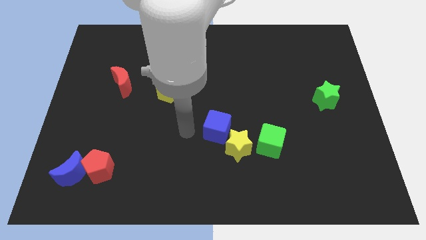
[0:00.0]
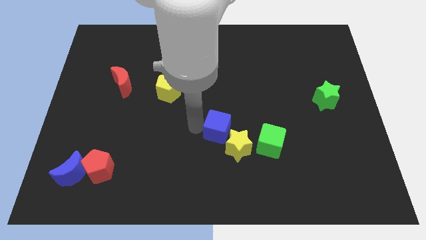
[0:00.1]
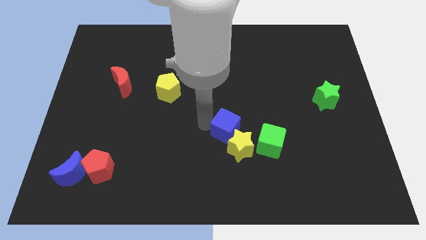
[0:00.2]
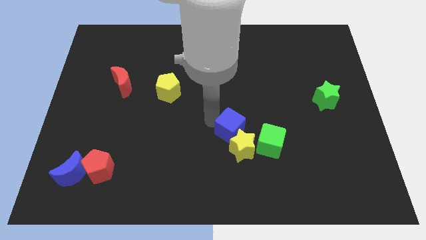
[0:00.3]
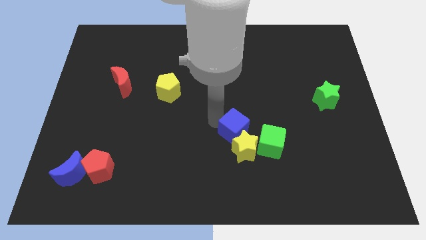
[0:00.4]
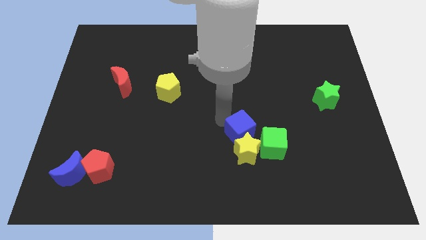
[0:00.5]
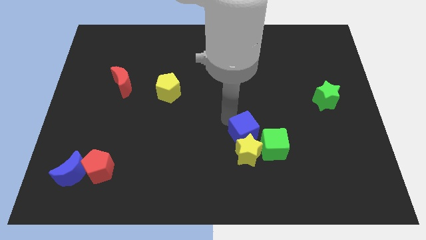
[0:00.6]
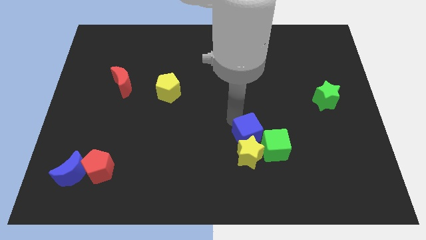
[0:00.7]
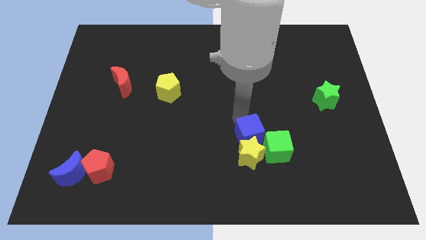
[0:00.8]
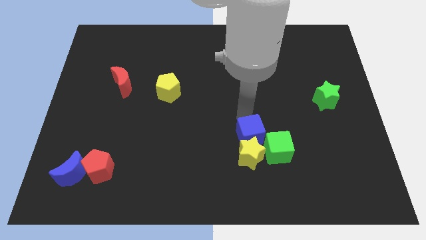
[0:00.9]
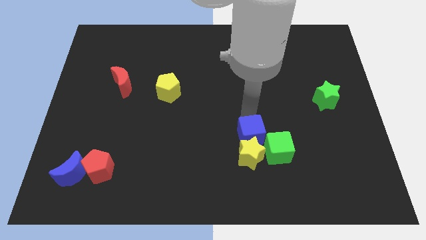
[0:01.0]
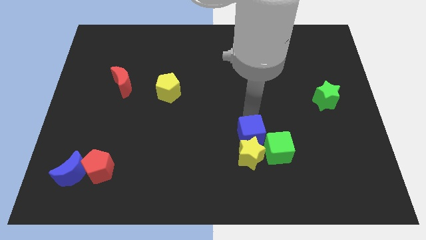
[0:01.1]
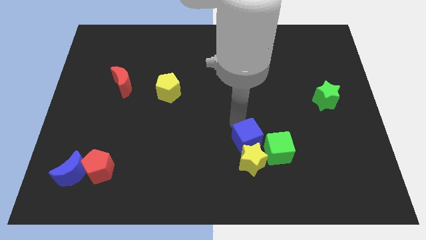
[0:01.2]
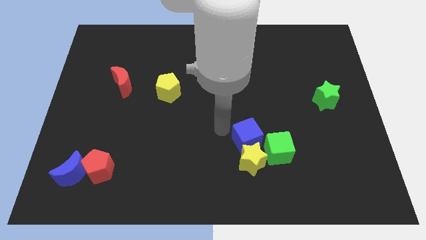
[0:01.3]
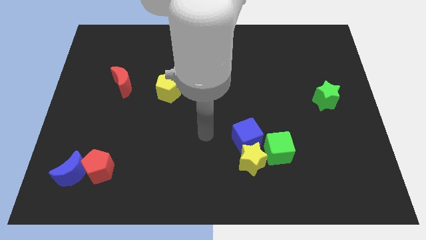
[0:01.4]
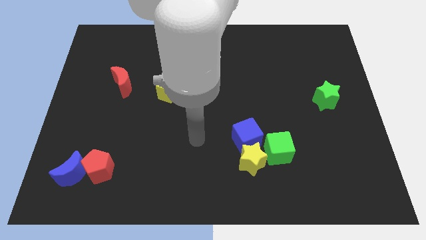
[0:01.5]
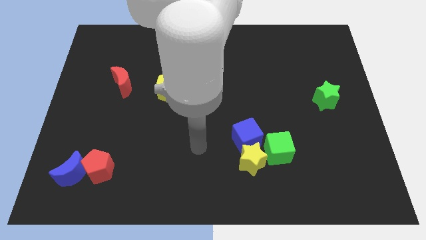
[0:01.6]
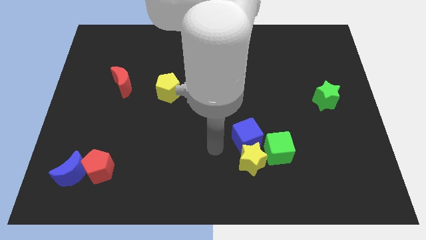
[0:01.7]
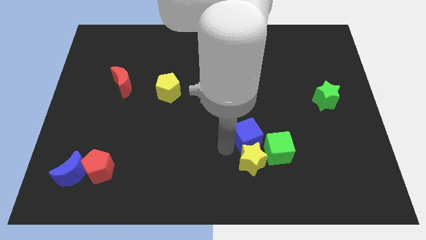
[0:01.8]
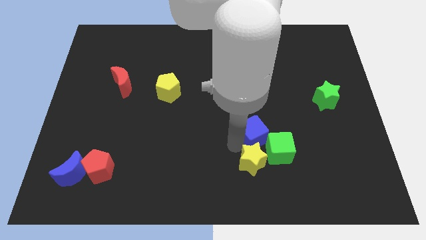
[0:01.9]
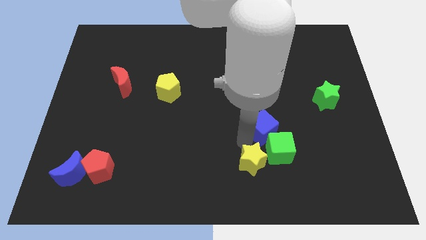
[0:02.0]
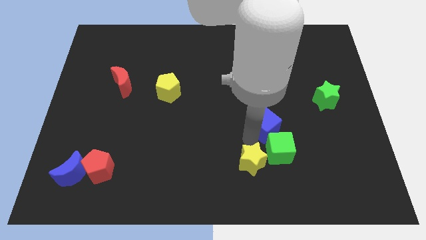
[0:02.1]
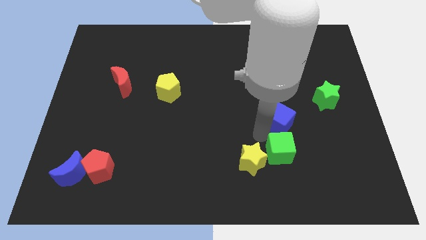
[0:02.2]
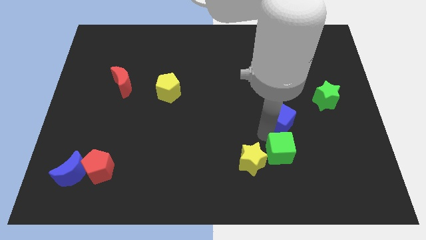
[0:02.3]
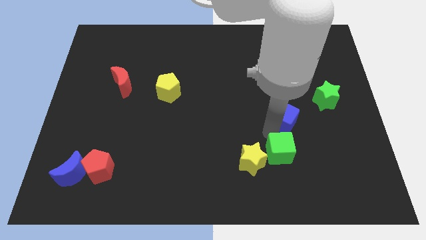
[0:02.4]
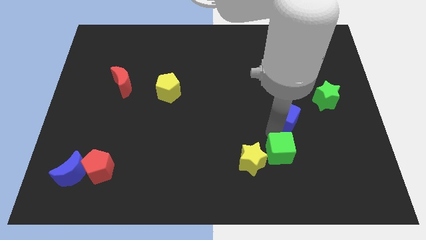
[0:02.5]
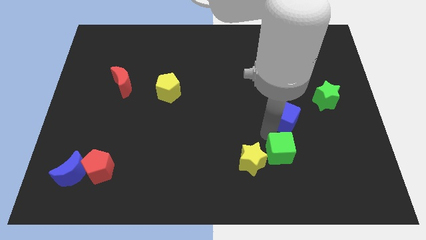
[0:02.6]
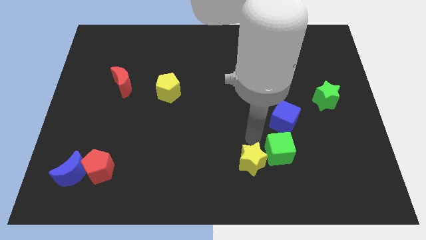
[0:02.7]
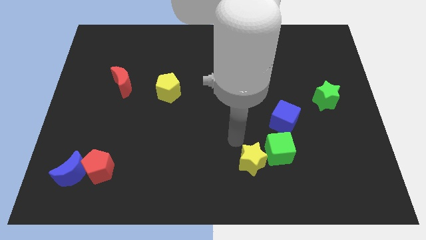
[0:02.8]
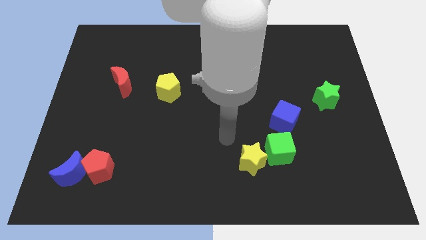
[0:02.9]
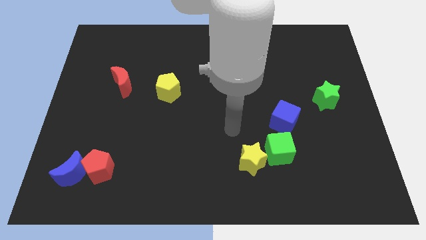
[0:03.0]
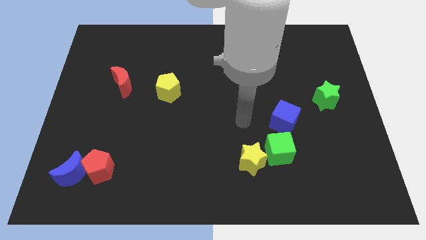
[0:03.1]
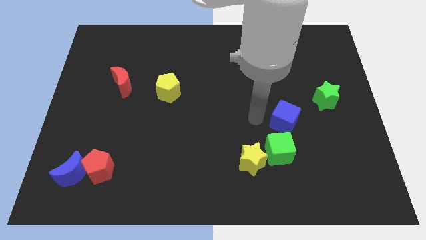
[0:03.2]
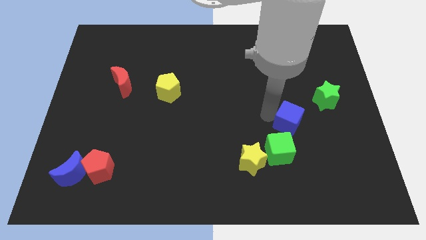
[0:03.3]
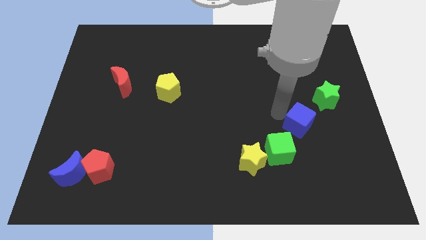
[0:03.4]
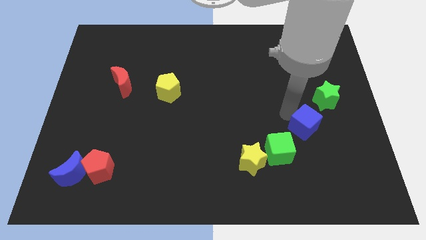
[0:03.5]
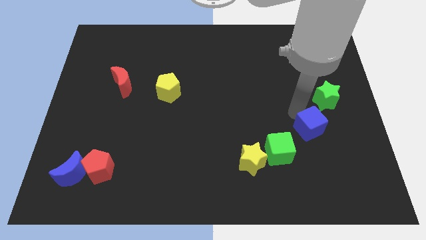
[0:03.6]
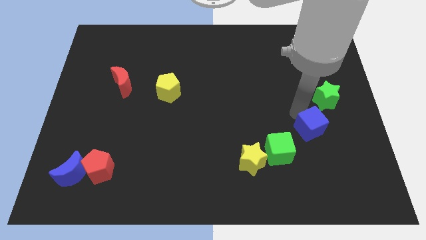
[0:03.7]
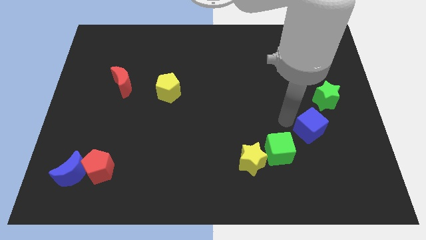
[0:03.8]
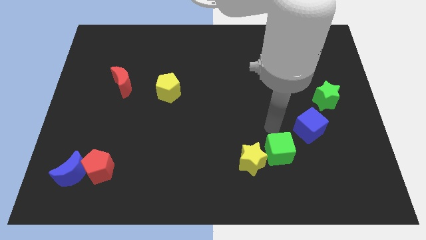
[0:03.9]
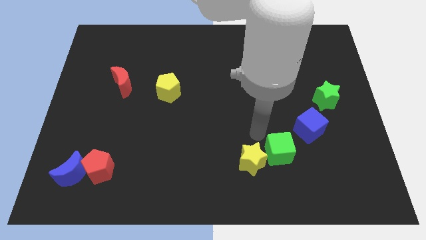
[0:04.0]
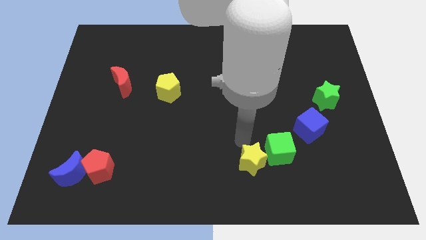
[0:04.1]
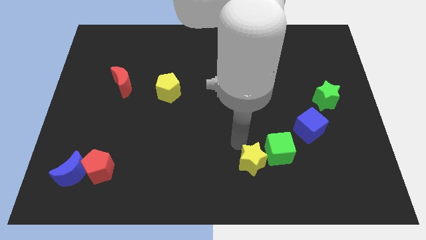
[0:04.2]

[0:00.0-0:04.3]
move the blue cube diagonally to the middle of green star and green cube

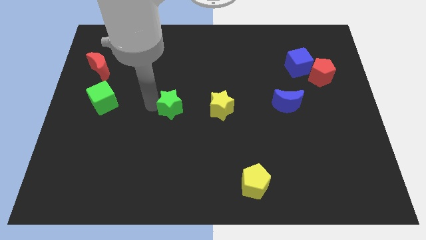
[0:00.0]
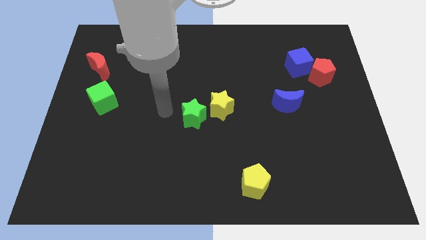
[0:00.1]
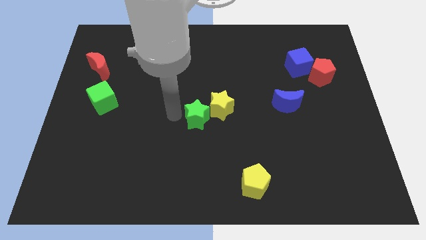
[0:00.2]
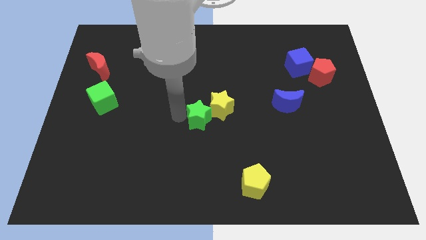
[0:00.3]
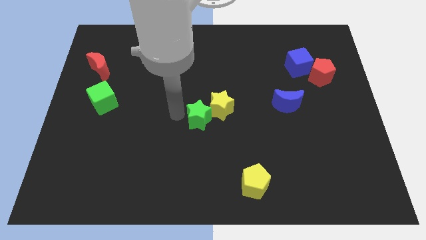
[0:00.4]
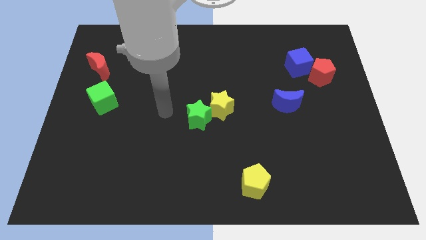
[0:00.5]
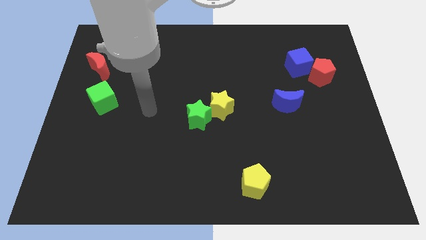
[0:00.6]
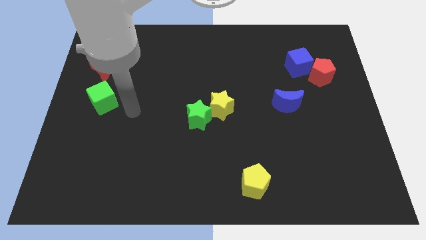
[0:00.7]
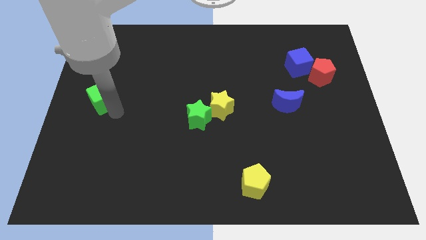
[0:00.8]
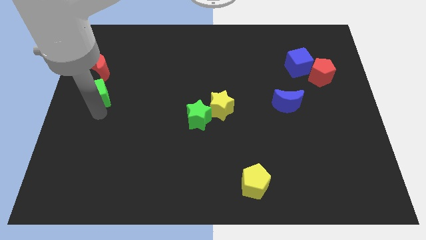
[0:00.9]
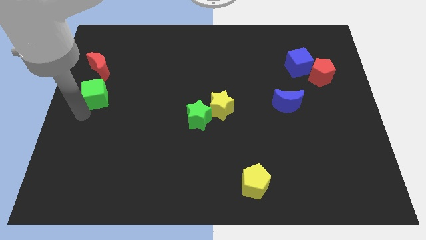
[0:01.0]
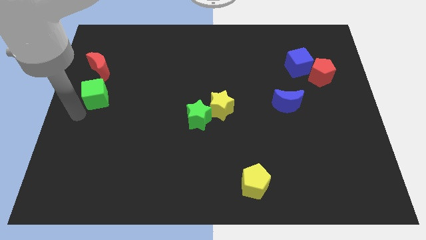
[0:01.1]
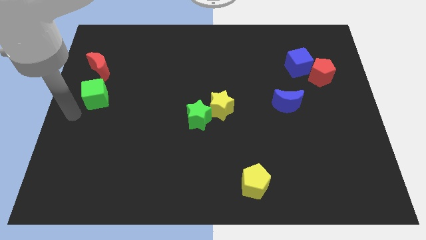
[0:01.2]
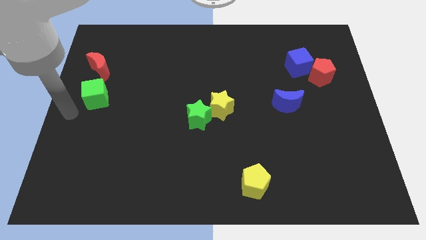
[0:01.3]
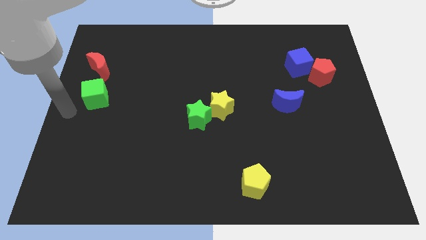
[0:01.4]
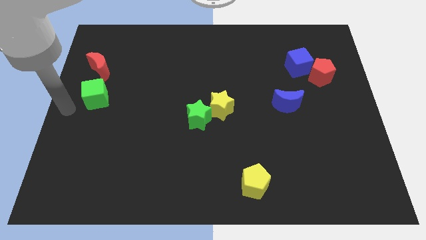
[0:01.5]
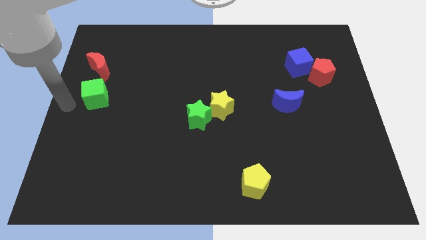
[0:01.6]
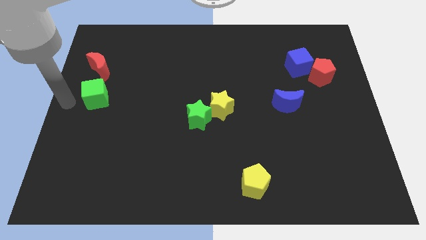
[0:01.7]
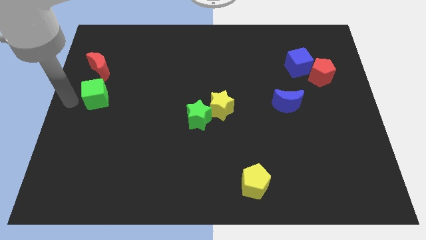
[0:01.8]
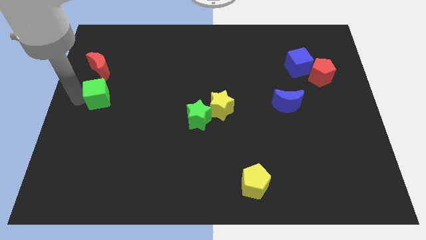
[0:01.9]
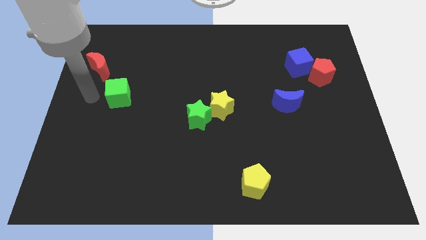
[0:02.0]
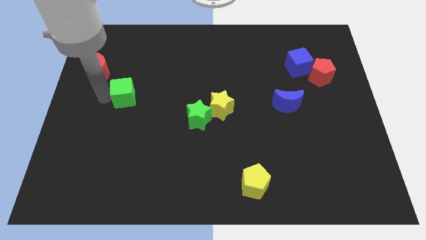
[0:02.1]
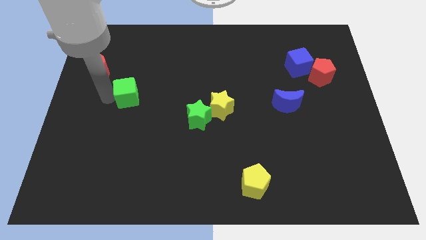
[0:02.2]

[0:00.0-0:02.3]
move green cube towards center

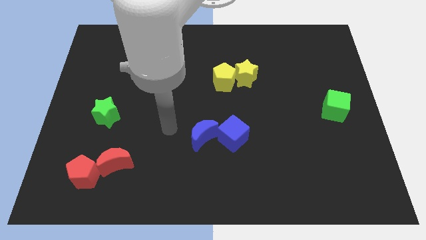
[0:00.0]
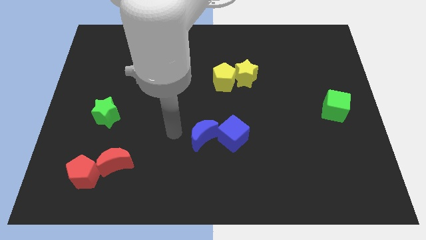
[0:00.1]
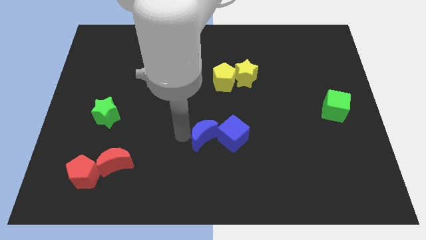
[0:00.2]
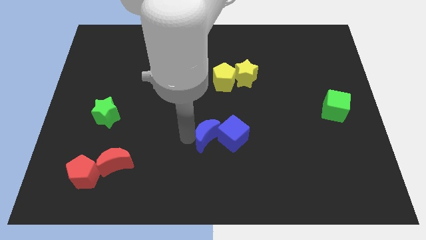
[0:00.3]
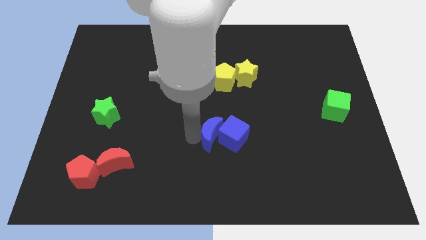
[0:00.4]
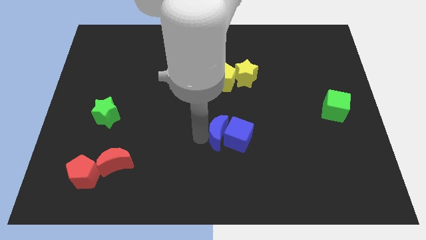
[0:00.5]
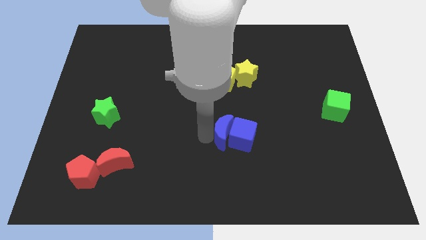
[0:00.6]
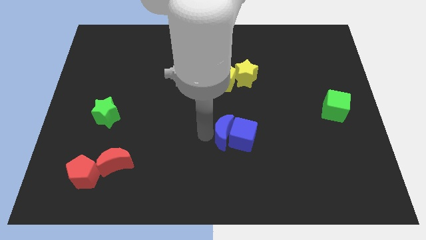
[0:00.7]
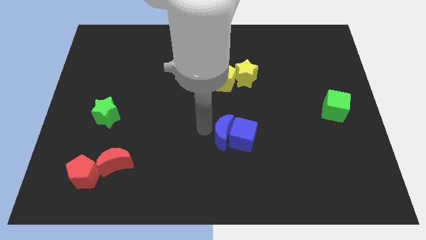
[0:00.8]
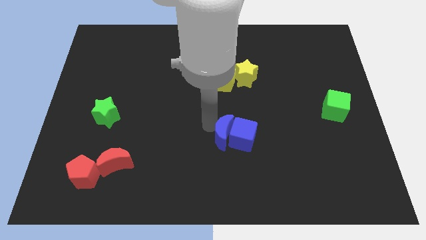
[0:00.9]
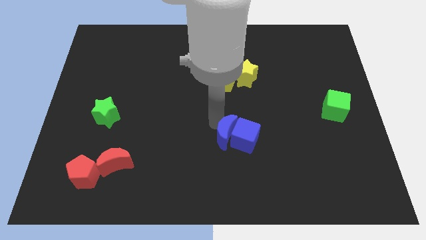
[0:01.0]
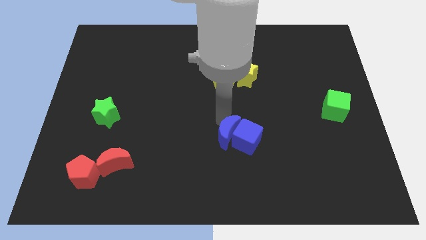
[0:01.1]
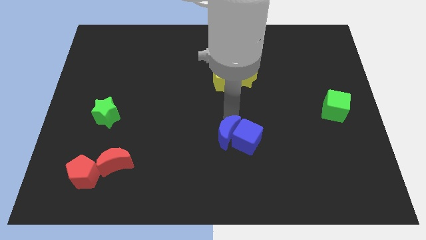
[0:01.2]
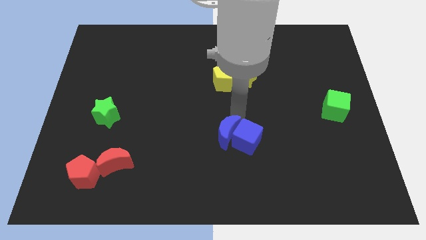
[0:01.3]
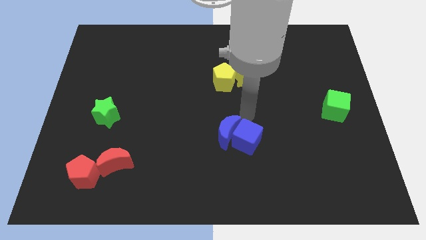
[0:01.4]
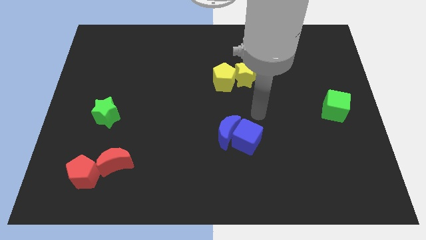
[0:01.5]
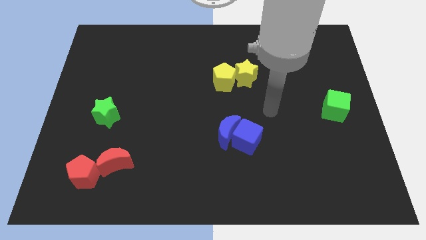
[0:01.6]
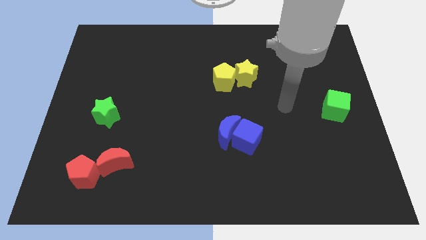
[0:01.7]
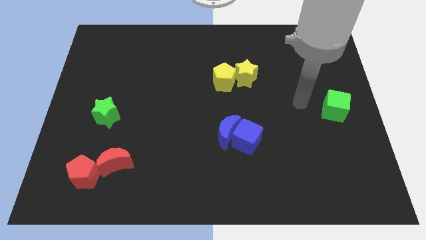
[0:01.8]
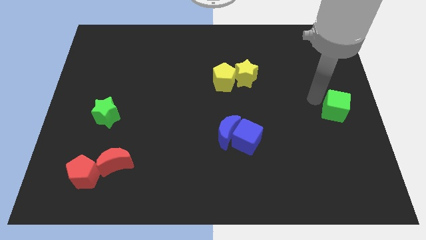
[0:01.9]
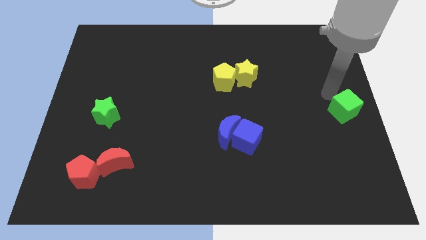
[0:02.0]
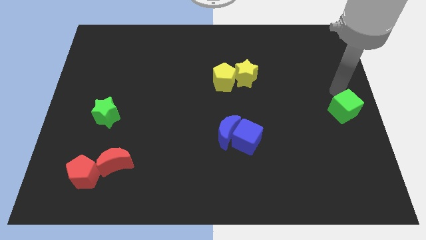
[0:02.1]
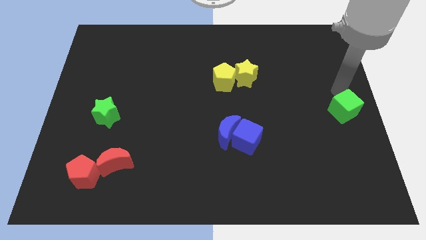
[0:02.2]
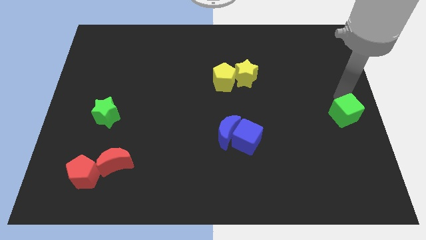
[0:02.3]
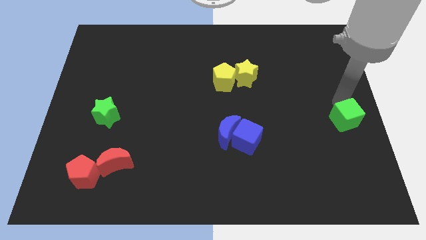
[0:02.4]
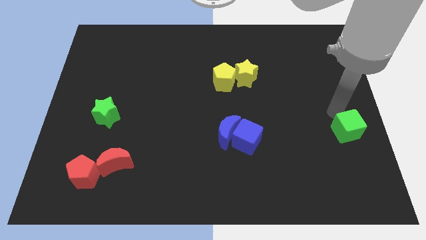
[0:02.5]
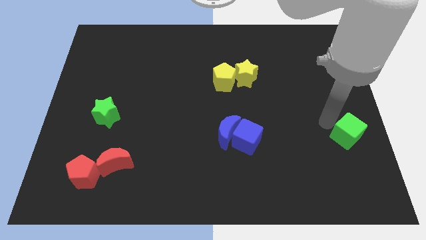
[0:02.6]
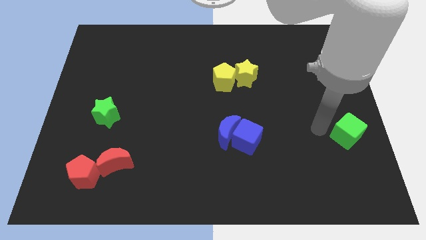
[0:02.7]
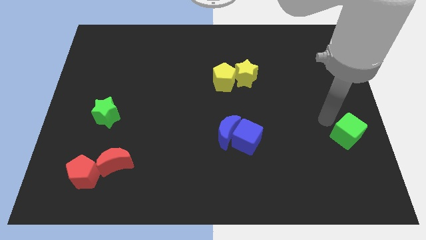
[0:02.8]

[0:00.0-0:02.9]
slightly move the green cube towards down
